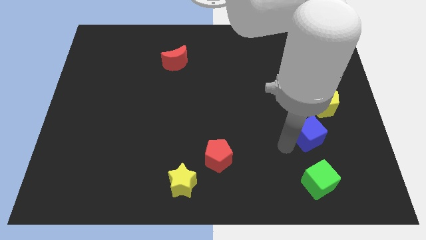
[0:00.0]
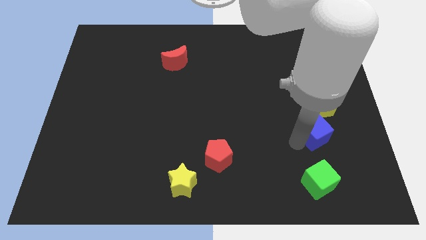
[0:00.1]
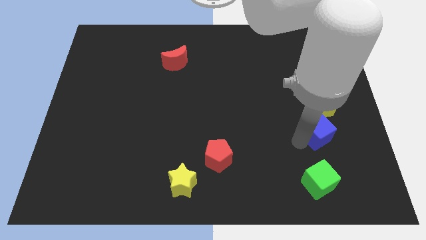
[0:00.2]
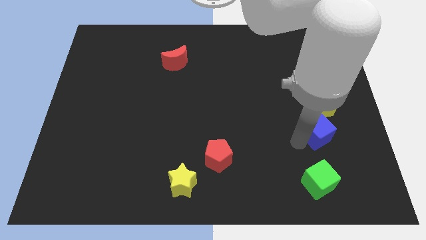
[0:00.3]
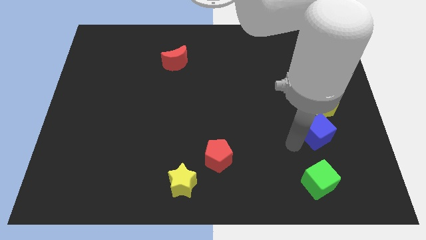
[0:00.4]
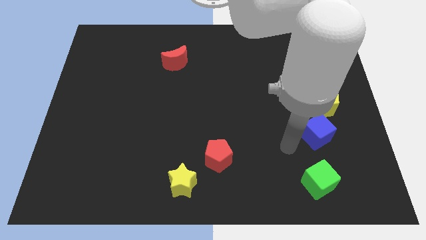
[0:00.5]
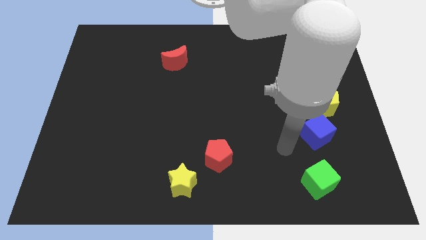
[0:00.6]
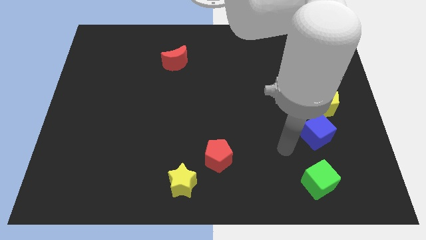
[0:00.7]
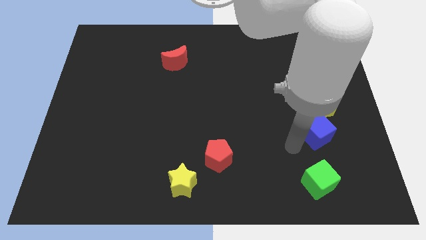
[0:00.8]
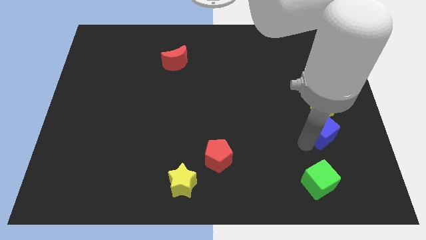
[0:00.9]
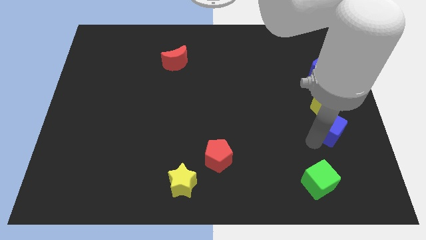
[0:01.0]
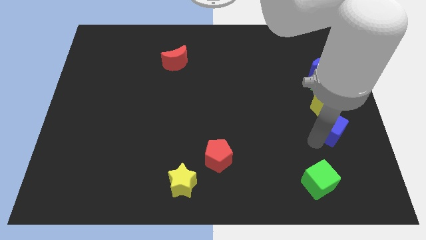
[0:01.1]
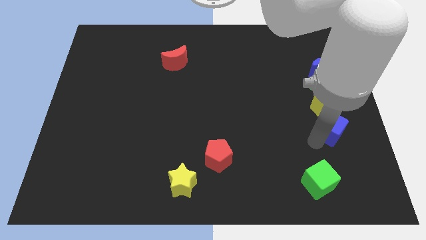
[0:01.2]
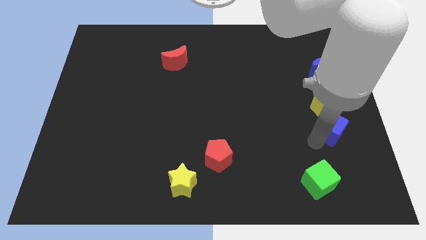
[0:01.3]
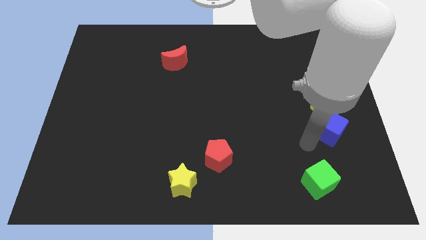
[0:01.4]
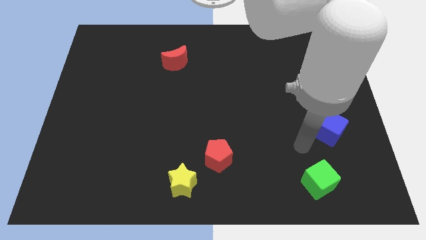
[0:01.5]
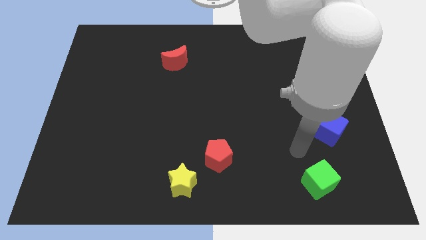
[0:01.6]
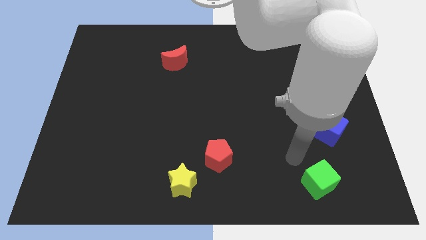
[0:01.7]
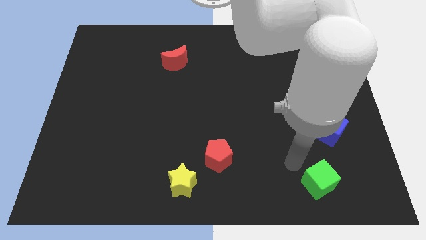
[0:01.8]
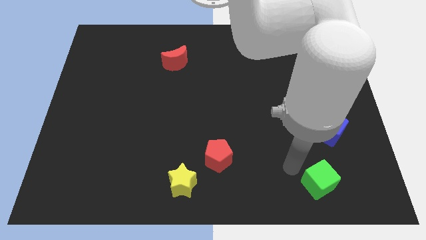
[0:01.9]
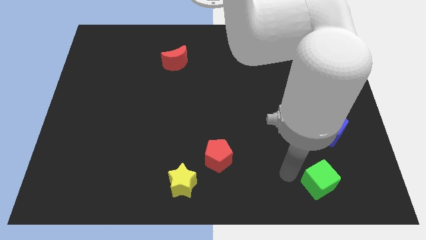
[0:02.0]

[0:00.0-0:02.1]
move the blue cube at the bottom of the yellow pentagon

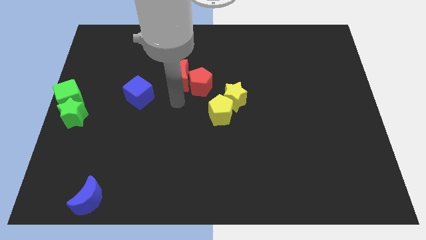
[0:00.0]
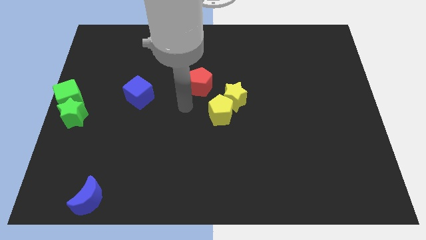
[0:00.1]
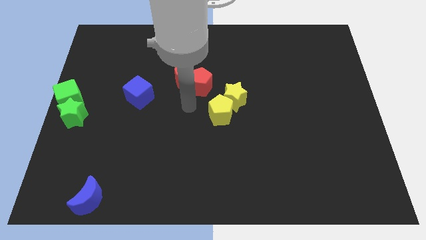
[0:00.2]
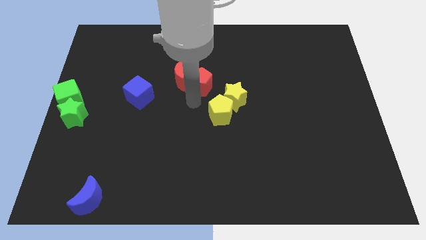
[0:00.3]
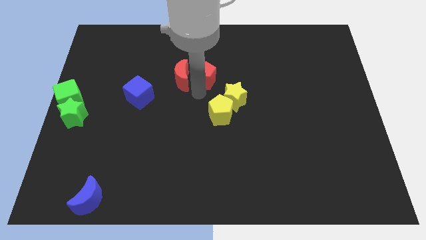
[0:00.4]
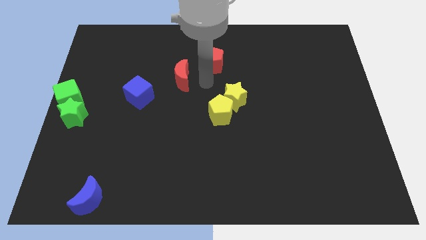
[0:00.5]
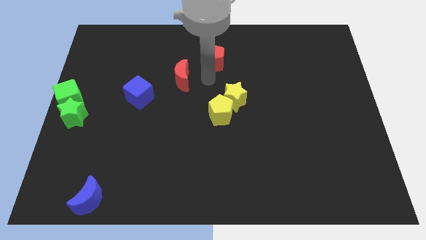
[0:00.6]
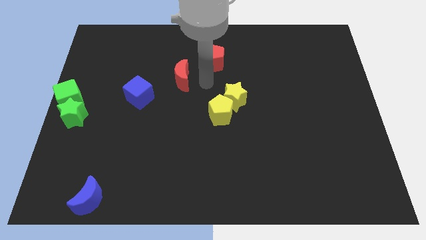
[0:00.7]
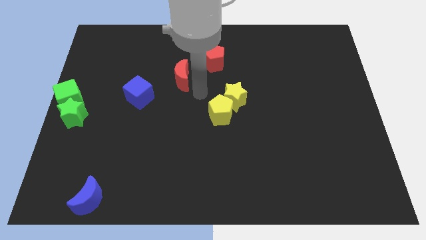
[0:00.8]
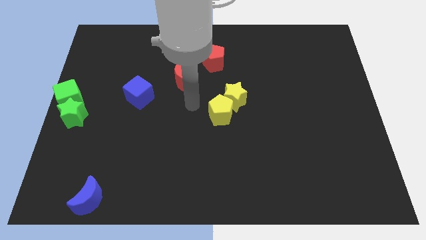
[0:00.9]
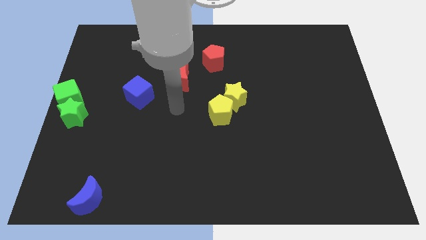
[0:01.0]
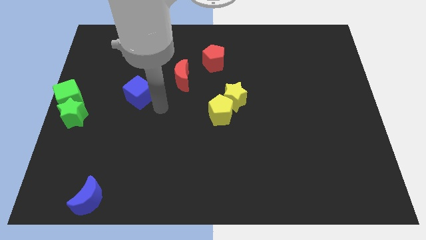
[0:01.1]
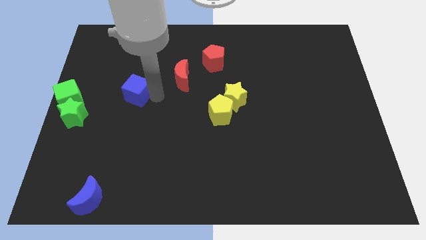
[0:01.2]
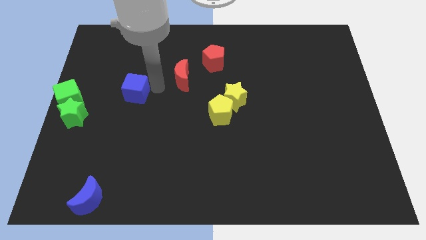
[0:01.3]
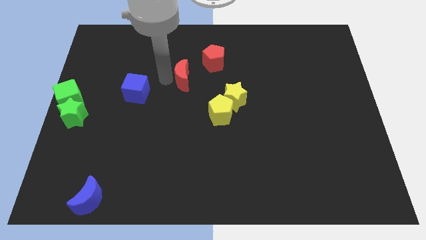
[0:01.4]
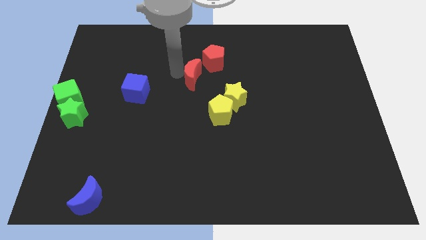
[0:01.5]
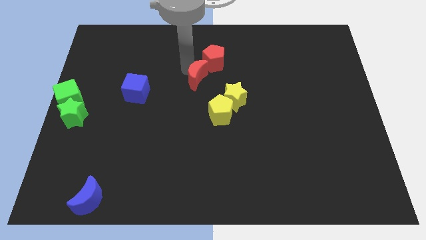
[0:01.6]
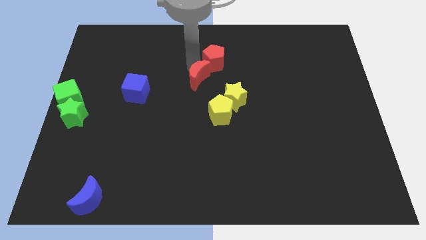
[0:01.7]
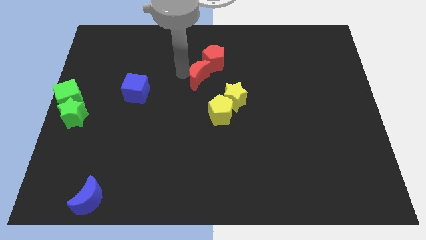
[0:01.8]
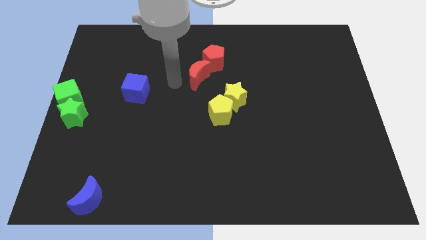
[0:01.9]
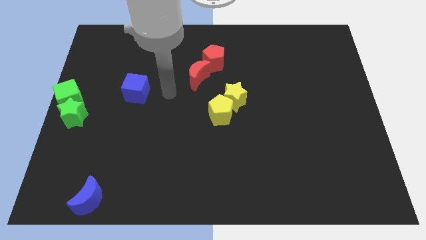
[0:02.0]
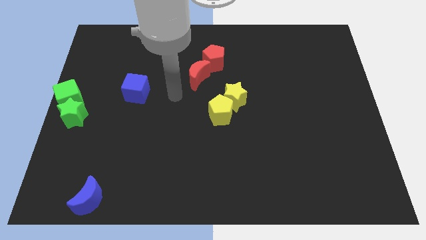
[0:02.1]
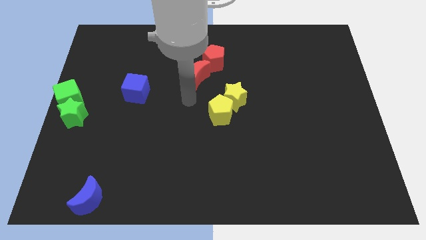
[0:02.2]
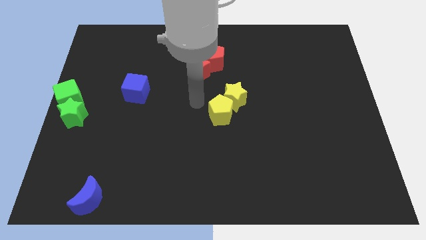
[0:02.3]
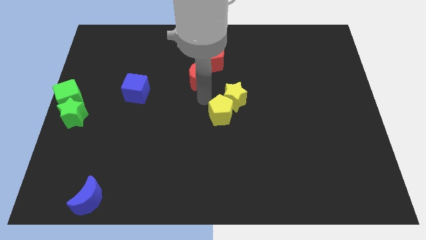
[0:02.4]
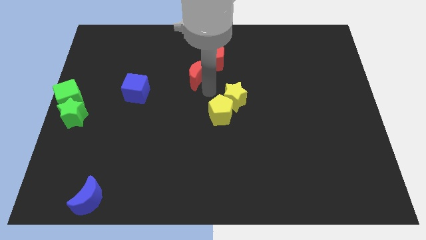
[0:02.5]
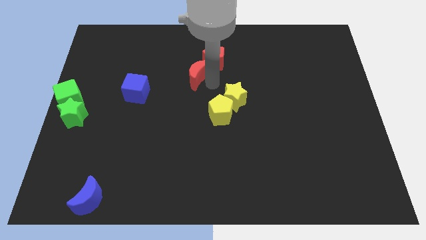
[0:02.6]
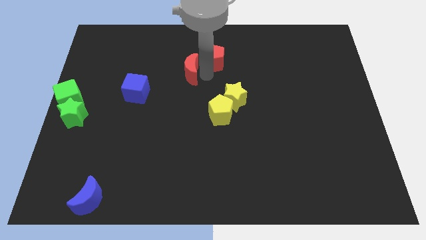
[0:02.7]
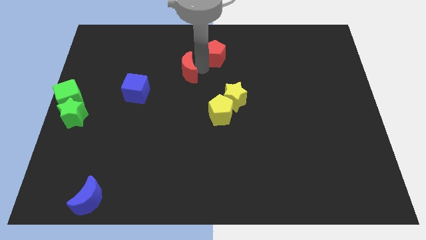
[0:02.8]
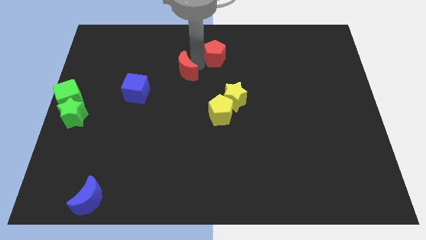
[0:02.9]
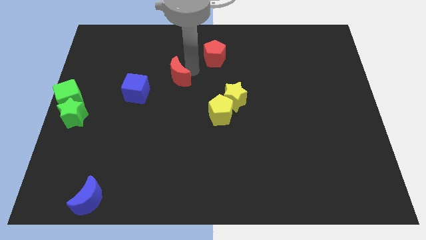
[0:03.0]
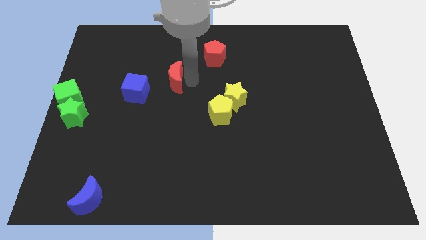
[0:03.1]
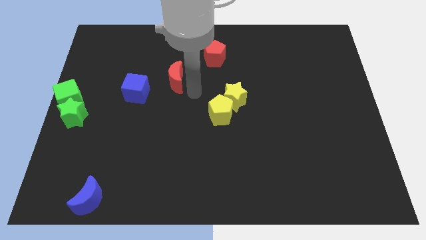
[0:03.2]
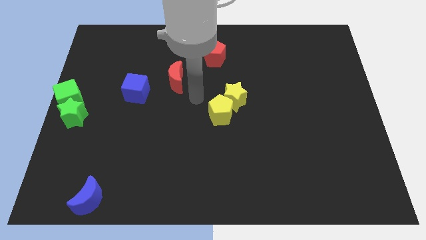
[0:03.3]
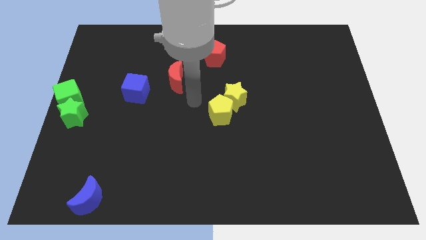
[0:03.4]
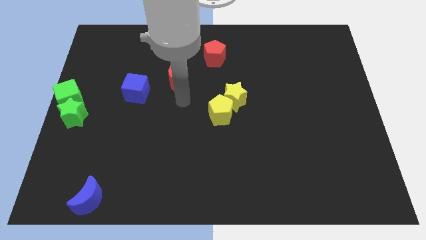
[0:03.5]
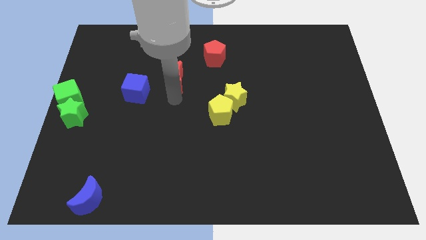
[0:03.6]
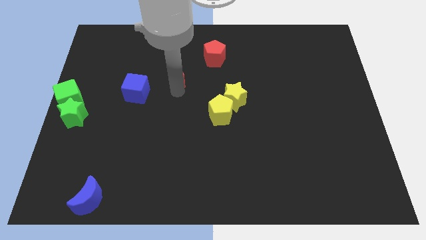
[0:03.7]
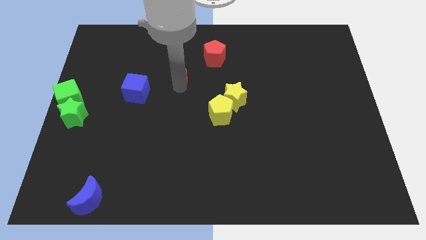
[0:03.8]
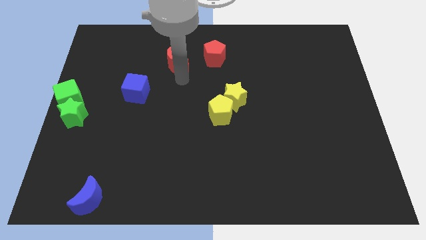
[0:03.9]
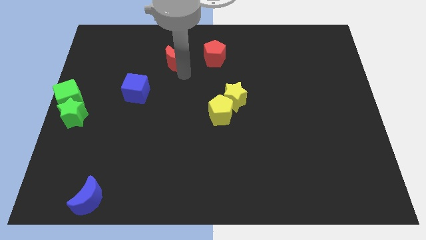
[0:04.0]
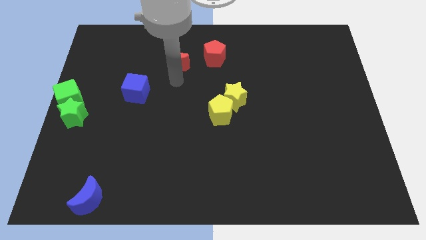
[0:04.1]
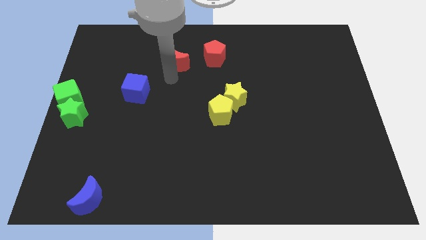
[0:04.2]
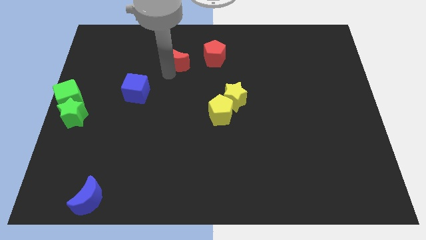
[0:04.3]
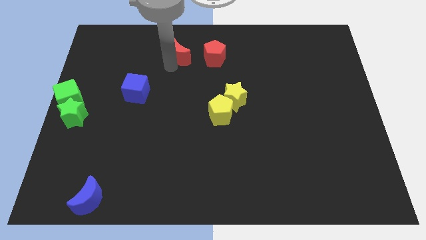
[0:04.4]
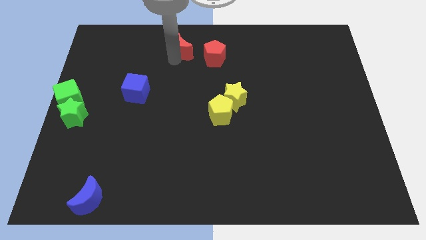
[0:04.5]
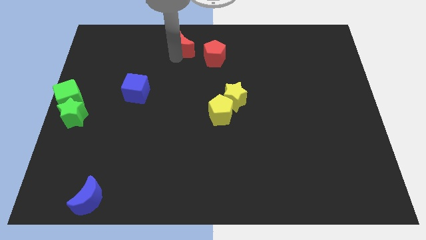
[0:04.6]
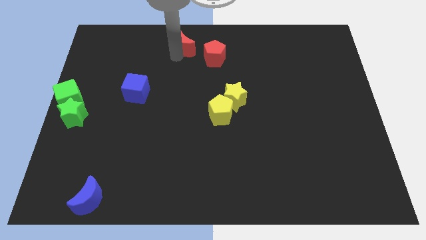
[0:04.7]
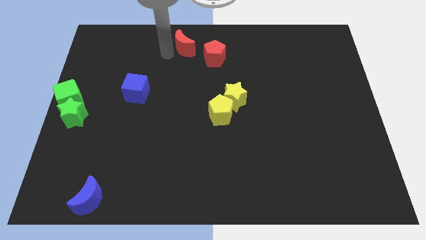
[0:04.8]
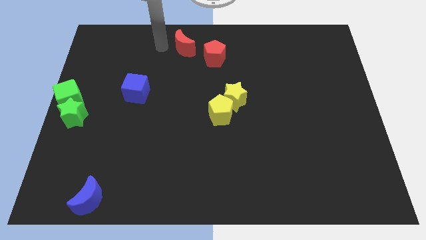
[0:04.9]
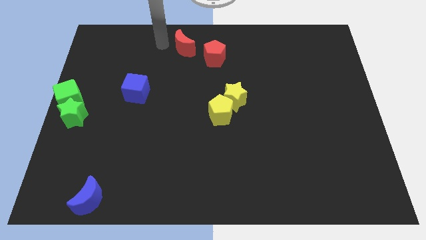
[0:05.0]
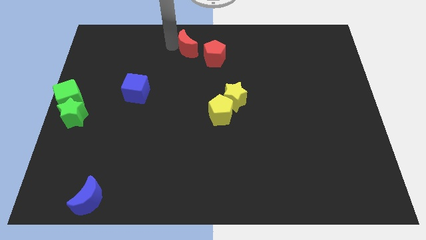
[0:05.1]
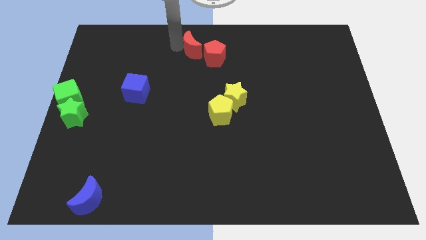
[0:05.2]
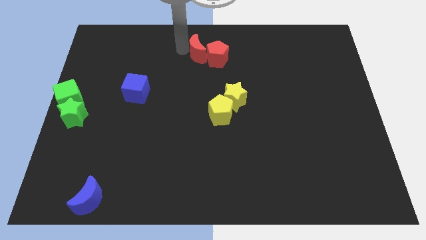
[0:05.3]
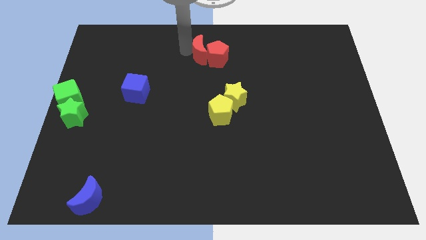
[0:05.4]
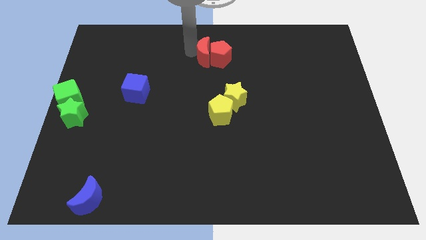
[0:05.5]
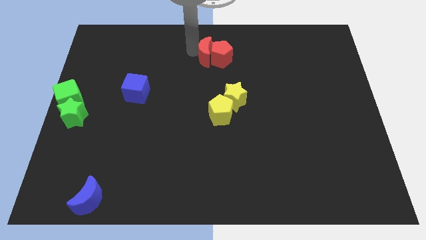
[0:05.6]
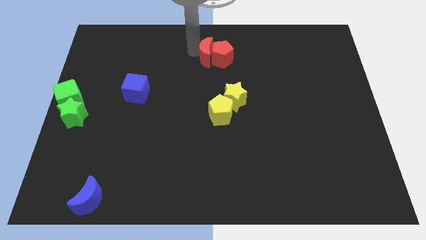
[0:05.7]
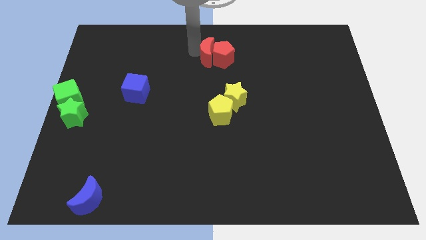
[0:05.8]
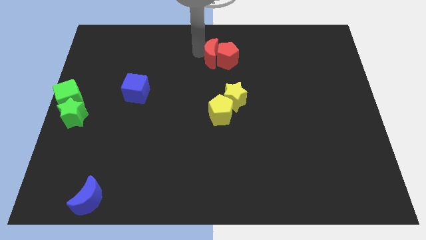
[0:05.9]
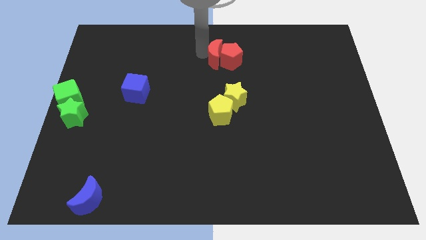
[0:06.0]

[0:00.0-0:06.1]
move the red blocks to the center of the board

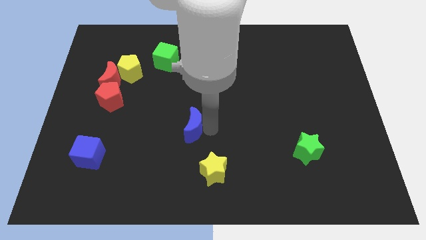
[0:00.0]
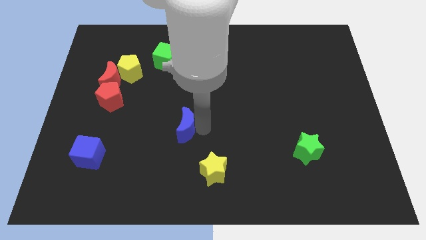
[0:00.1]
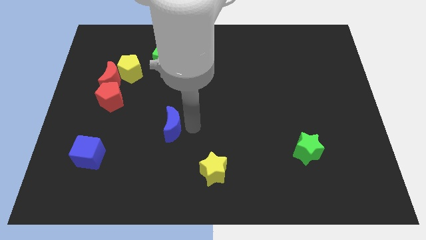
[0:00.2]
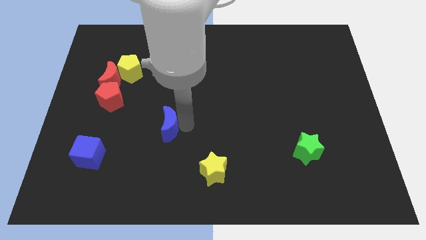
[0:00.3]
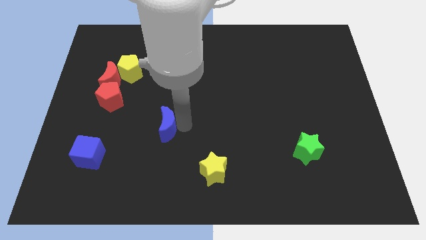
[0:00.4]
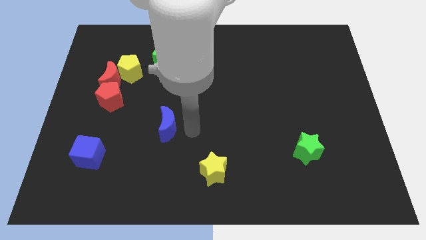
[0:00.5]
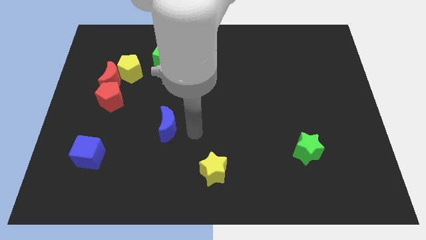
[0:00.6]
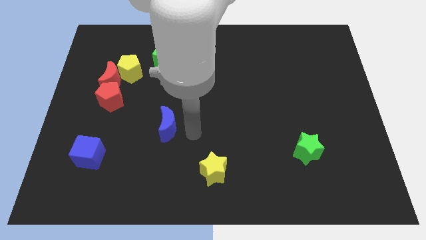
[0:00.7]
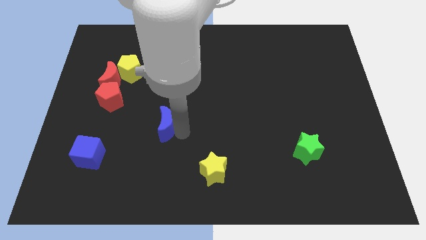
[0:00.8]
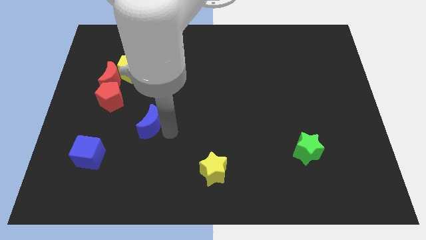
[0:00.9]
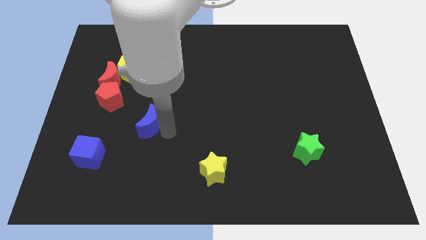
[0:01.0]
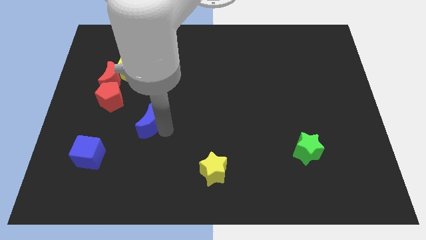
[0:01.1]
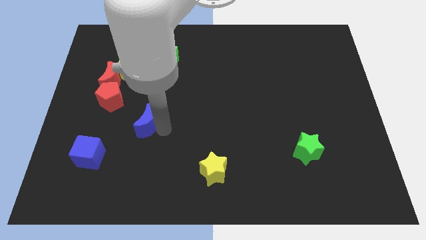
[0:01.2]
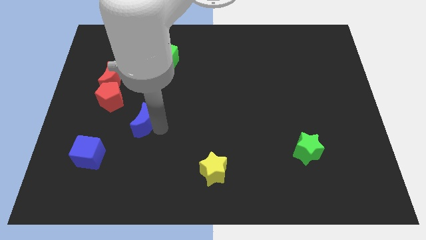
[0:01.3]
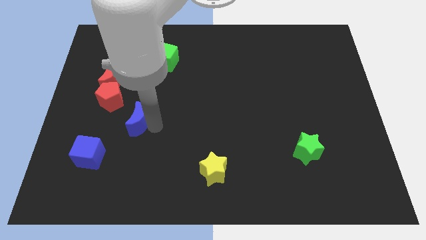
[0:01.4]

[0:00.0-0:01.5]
place the blue moon diagonal to the blue cube
